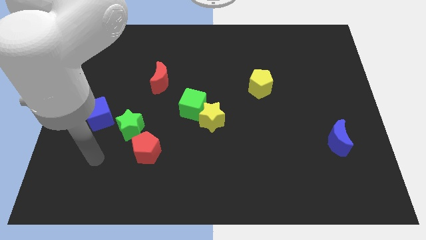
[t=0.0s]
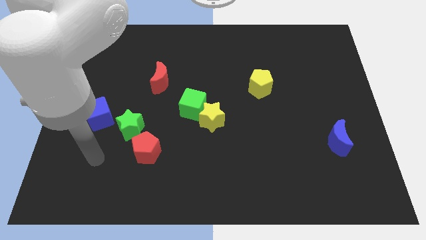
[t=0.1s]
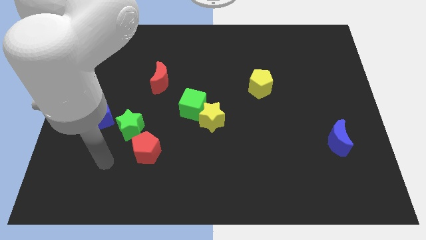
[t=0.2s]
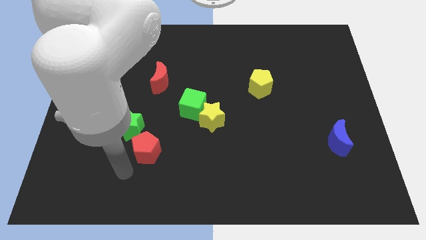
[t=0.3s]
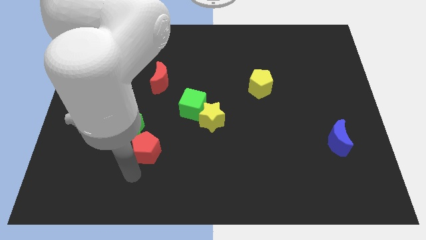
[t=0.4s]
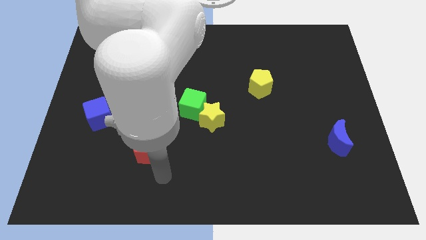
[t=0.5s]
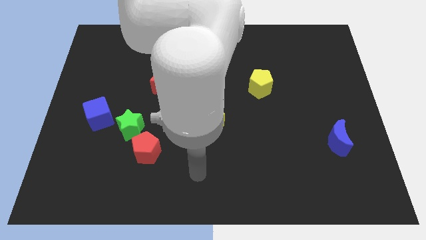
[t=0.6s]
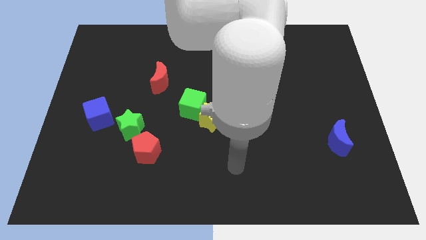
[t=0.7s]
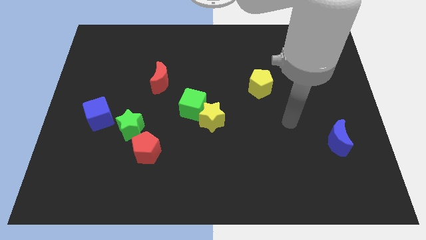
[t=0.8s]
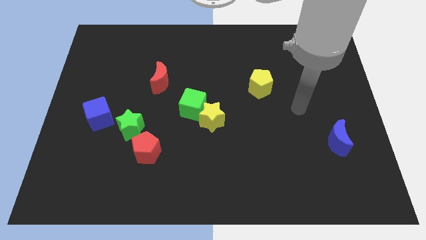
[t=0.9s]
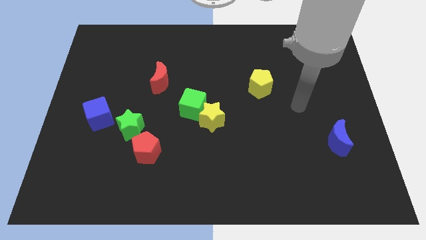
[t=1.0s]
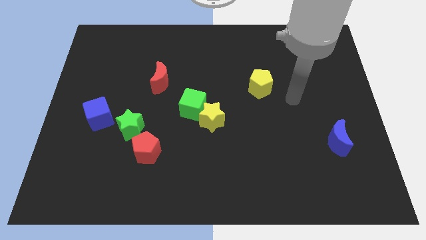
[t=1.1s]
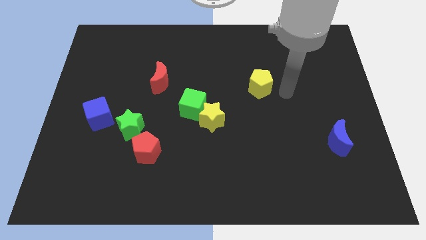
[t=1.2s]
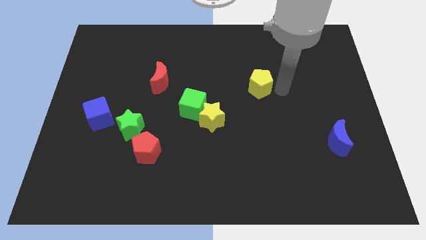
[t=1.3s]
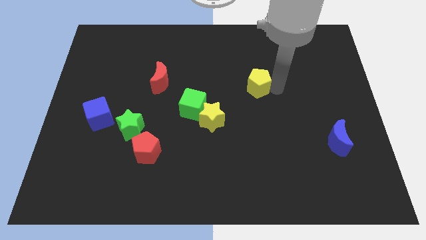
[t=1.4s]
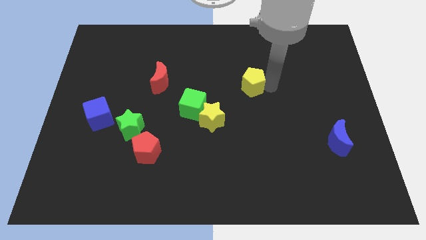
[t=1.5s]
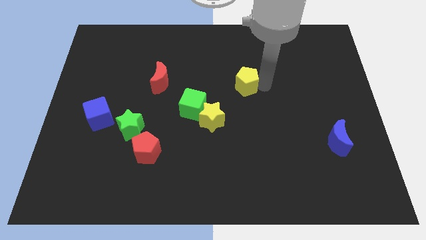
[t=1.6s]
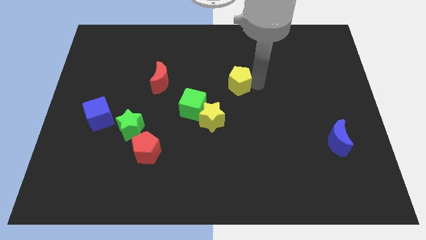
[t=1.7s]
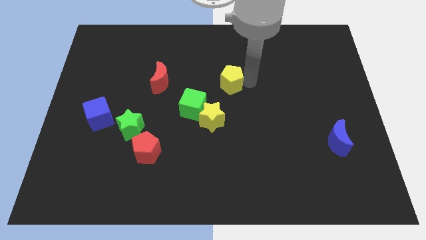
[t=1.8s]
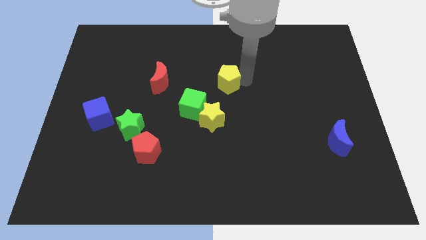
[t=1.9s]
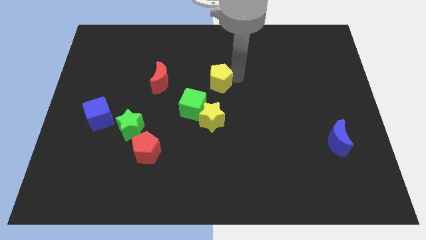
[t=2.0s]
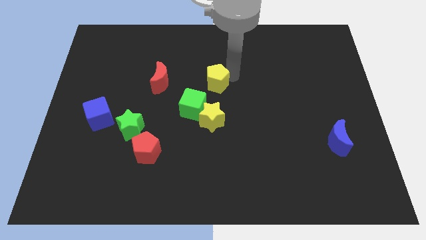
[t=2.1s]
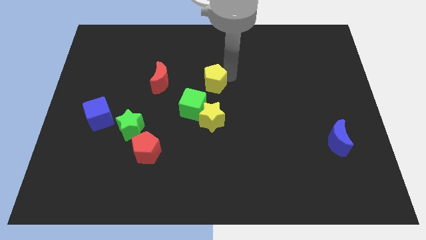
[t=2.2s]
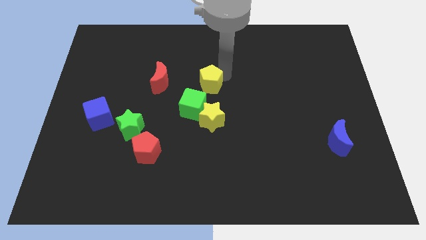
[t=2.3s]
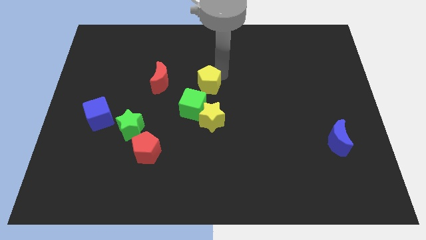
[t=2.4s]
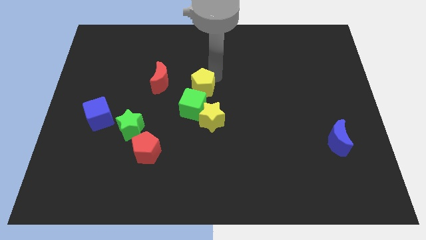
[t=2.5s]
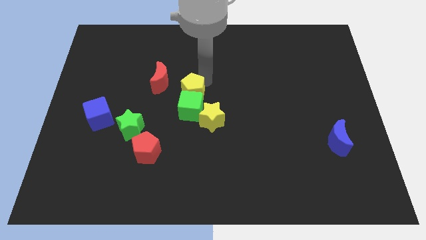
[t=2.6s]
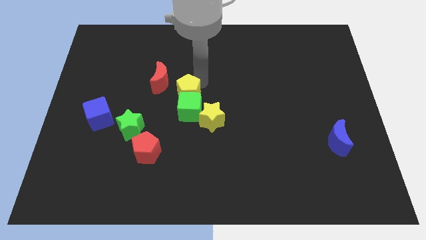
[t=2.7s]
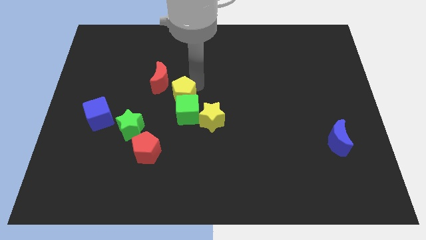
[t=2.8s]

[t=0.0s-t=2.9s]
move the yellow pentagon towards the green cube

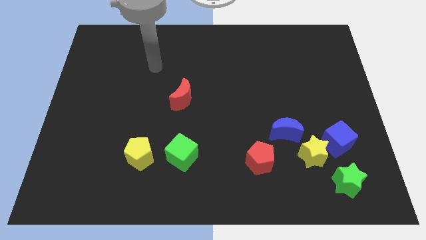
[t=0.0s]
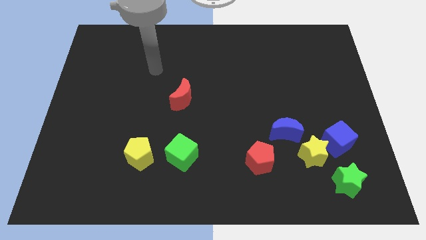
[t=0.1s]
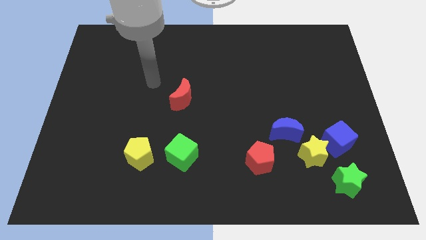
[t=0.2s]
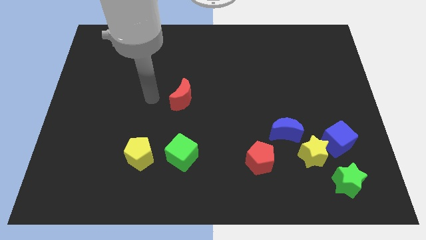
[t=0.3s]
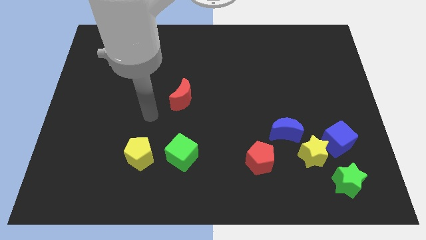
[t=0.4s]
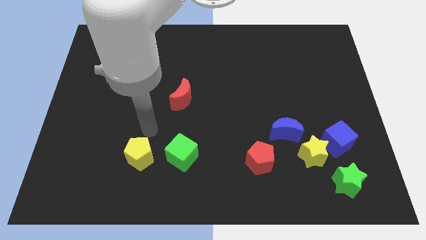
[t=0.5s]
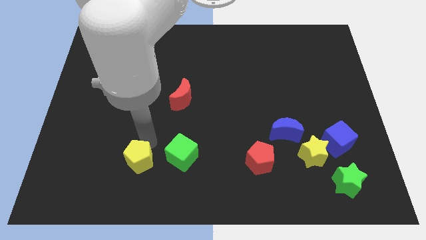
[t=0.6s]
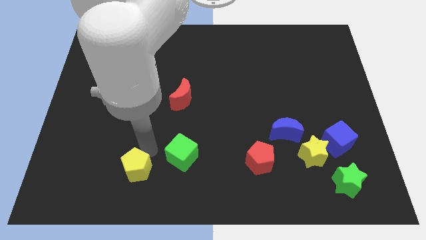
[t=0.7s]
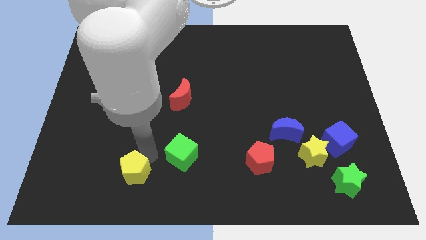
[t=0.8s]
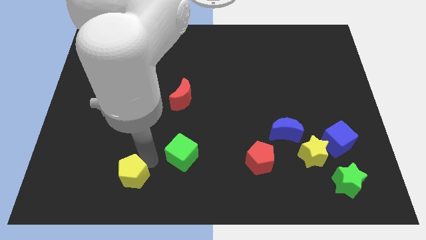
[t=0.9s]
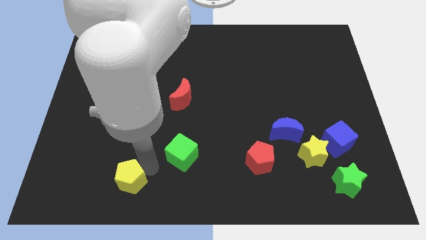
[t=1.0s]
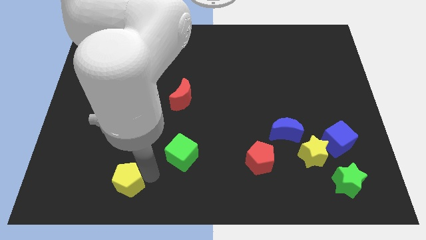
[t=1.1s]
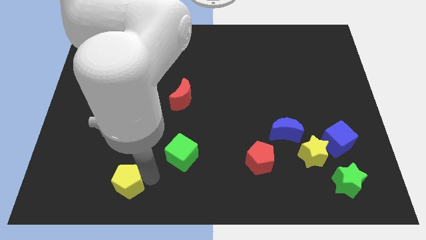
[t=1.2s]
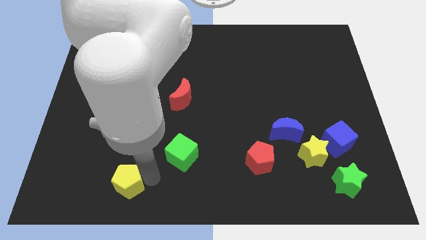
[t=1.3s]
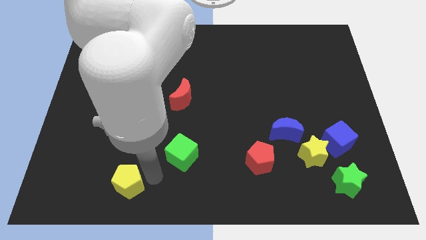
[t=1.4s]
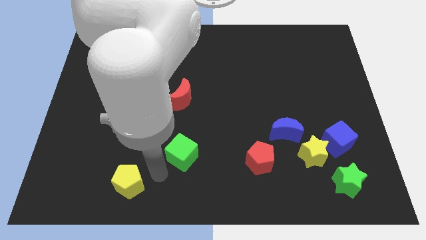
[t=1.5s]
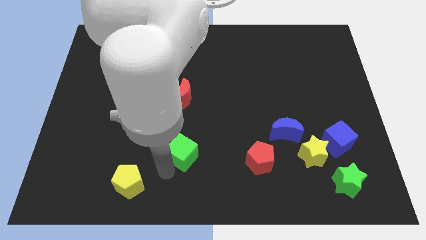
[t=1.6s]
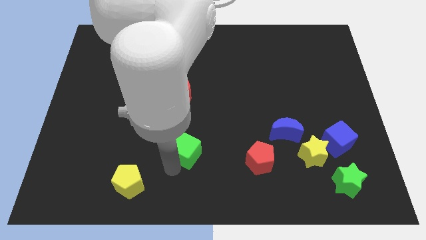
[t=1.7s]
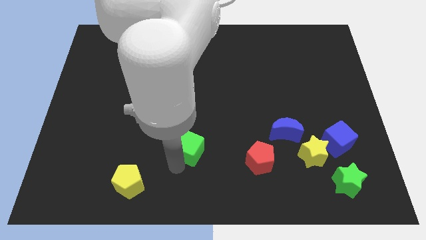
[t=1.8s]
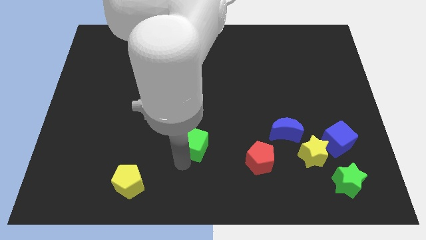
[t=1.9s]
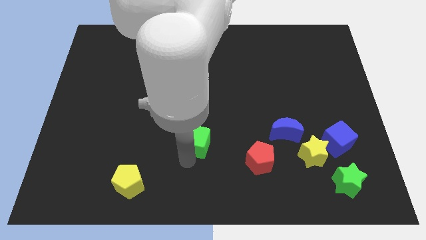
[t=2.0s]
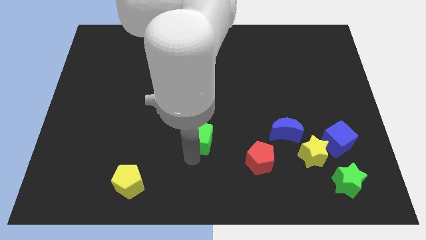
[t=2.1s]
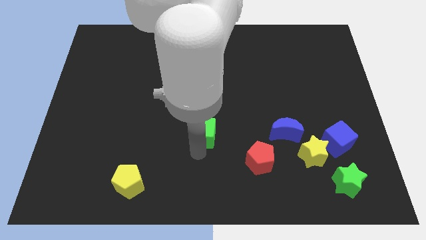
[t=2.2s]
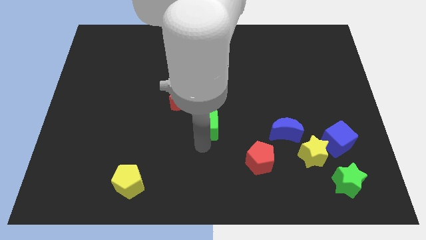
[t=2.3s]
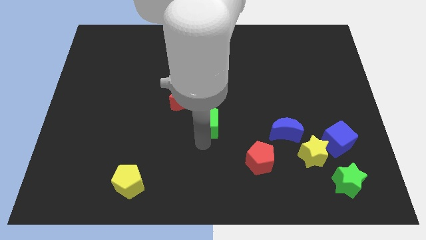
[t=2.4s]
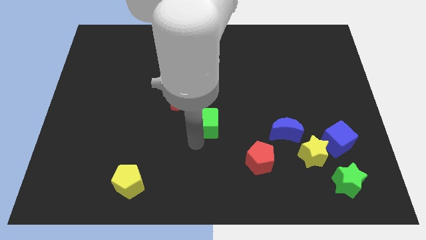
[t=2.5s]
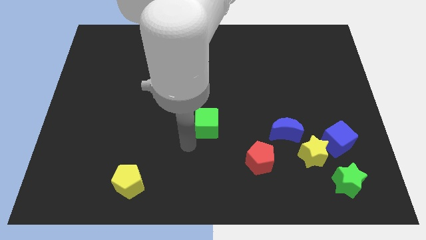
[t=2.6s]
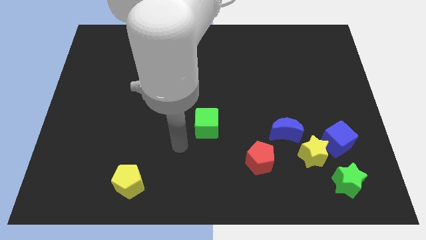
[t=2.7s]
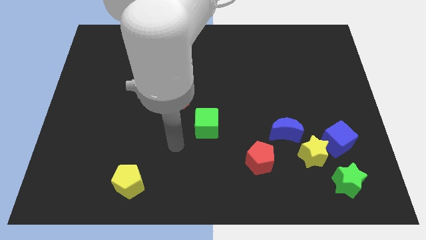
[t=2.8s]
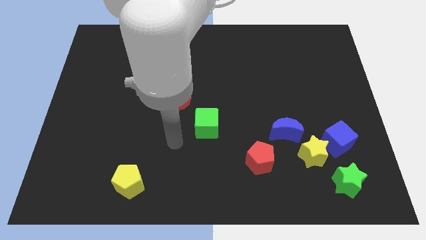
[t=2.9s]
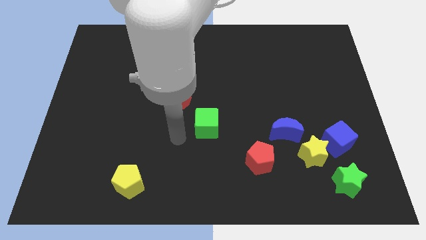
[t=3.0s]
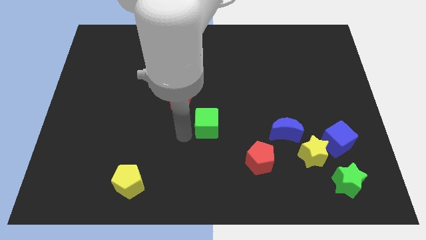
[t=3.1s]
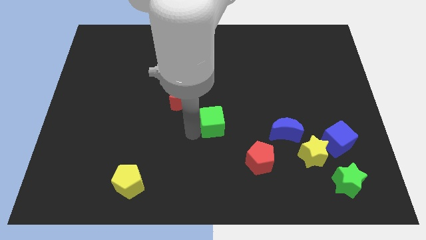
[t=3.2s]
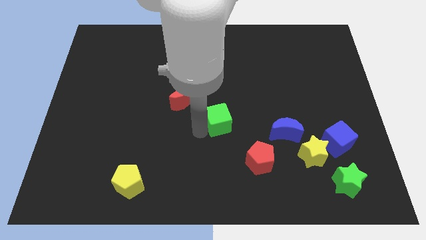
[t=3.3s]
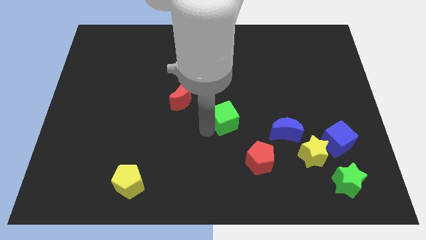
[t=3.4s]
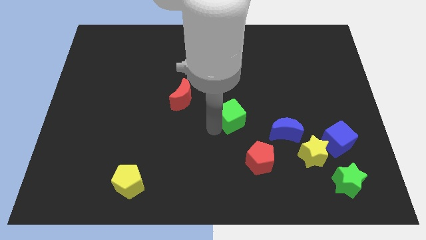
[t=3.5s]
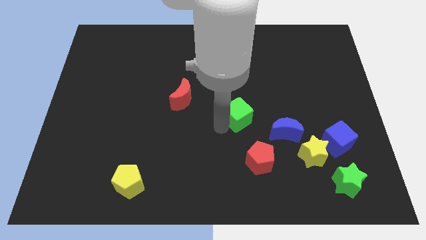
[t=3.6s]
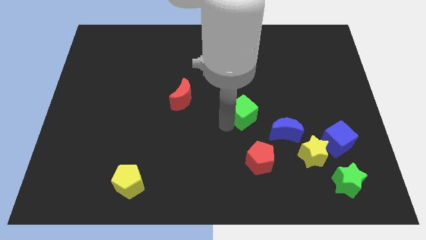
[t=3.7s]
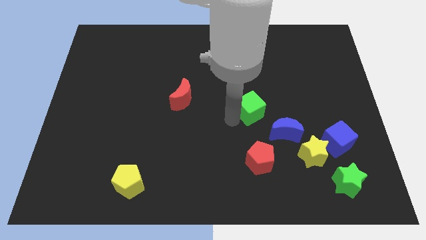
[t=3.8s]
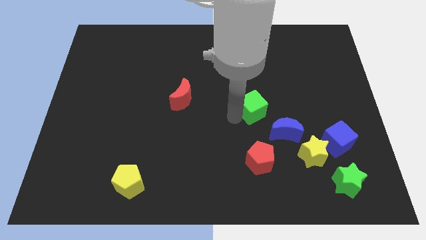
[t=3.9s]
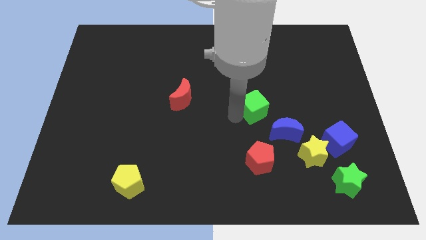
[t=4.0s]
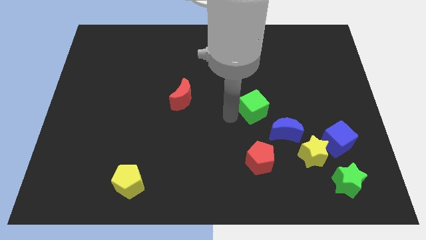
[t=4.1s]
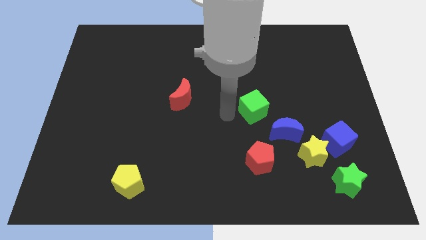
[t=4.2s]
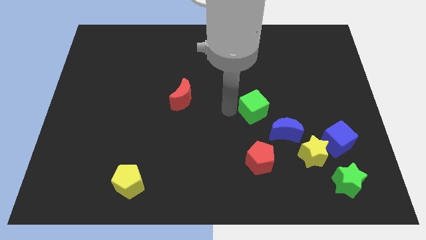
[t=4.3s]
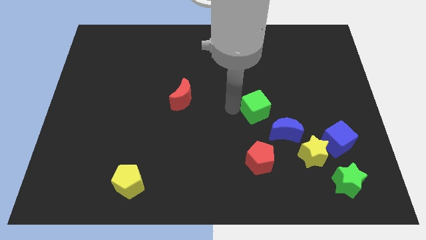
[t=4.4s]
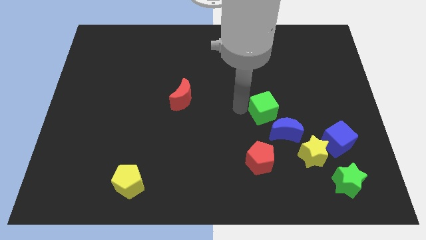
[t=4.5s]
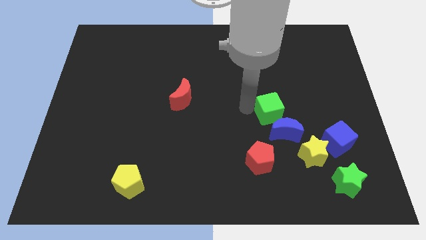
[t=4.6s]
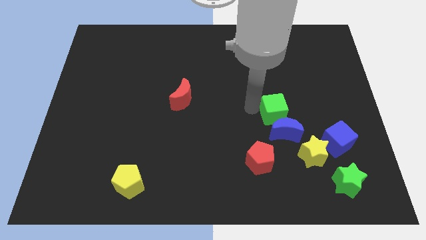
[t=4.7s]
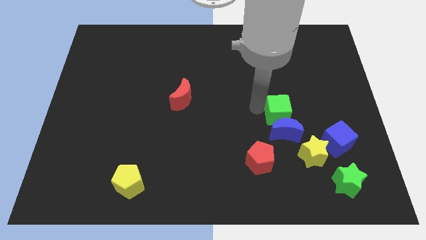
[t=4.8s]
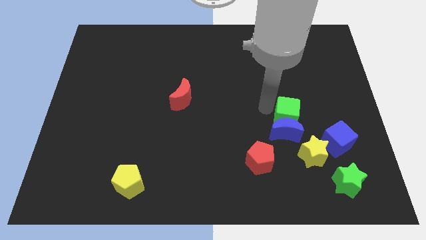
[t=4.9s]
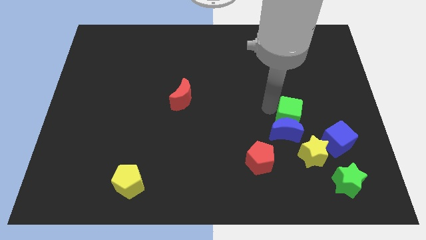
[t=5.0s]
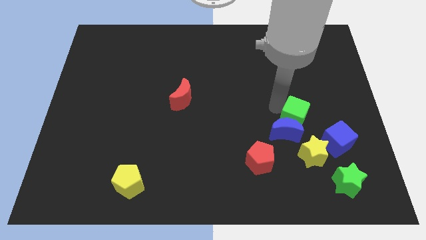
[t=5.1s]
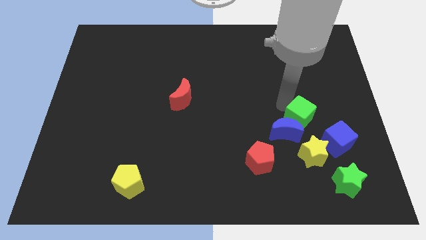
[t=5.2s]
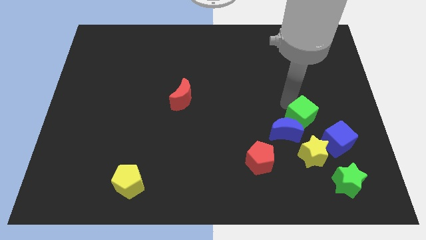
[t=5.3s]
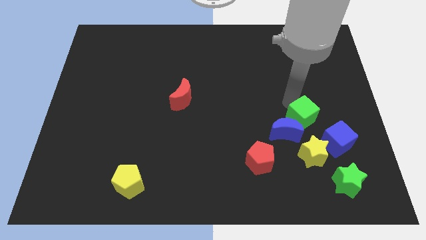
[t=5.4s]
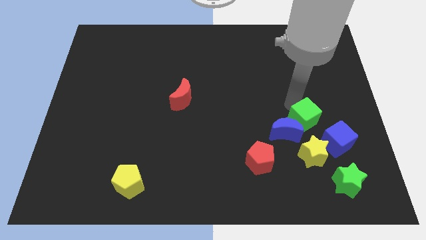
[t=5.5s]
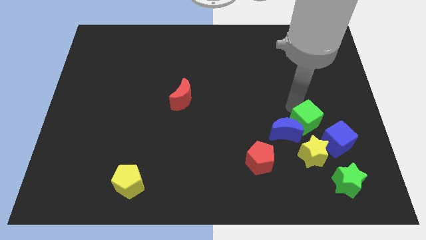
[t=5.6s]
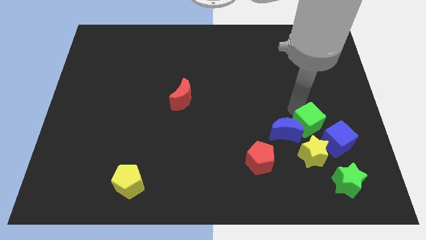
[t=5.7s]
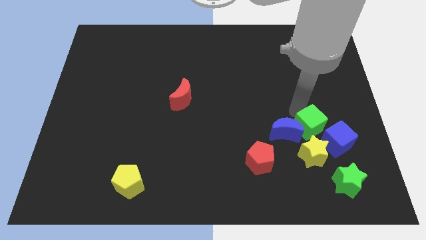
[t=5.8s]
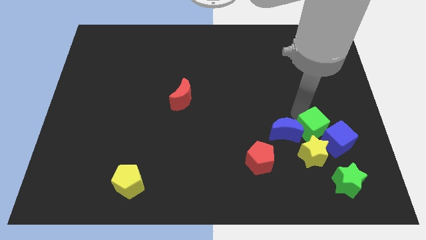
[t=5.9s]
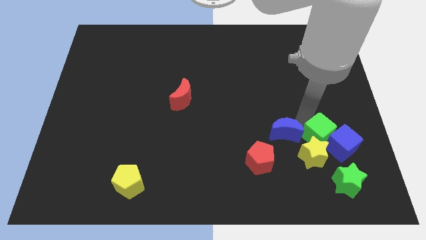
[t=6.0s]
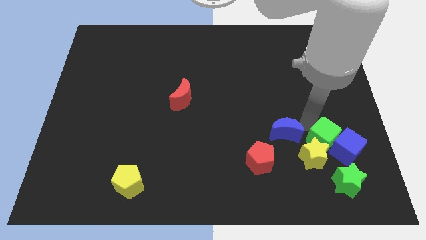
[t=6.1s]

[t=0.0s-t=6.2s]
put the green cube towards the blue cube
